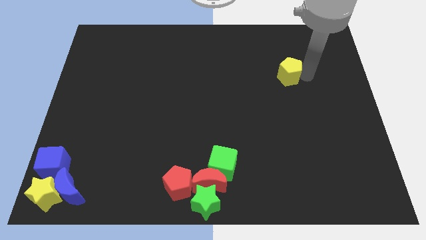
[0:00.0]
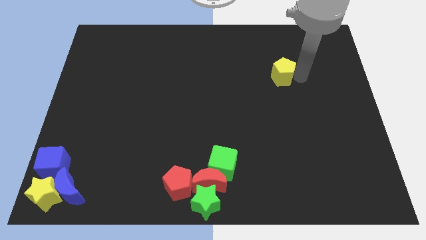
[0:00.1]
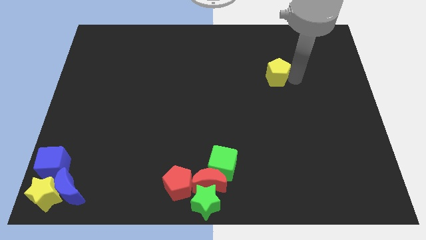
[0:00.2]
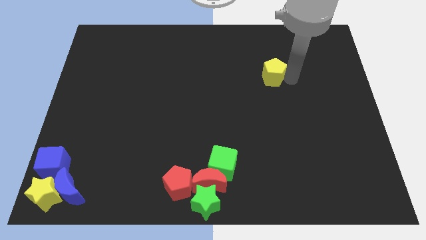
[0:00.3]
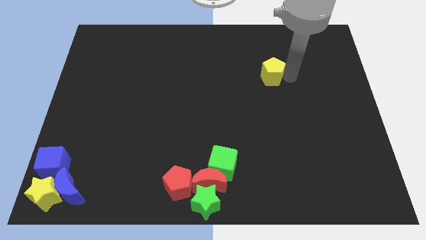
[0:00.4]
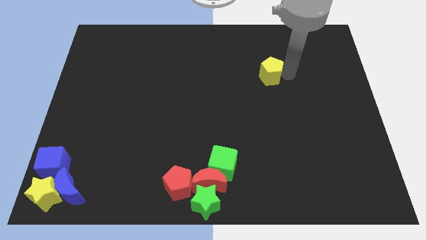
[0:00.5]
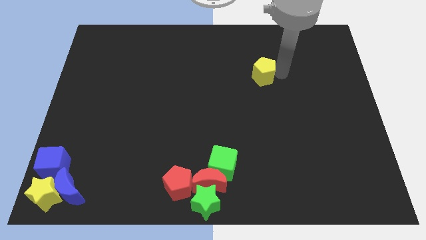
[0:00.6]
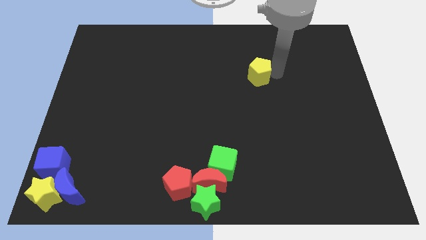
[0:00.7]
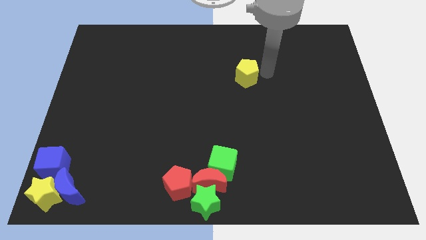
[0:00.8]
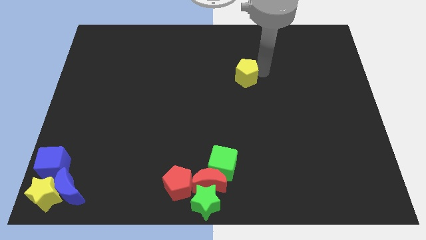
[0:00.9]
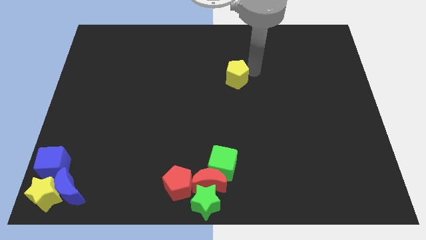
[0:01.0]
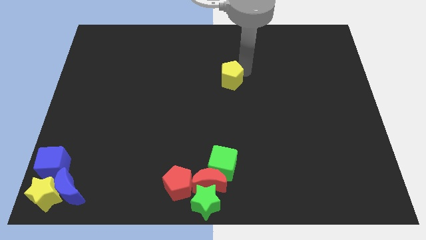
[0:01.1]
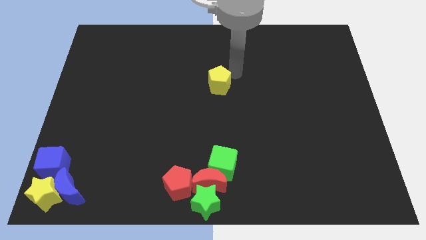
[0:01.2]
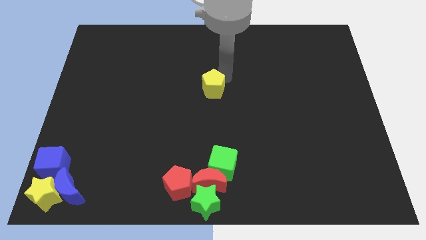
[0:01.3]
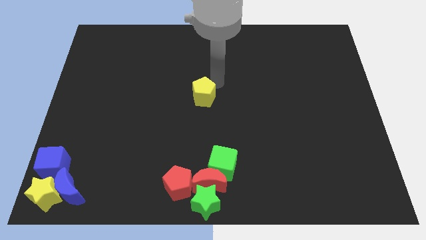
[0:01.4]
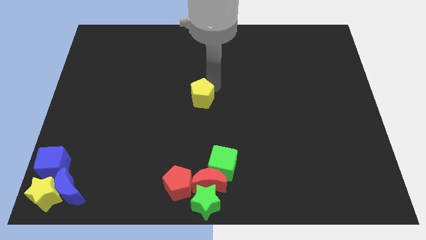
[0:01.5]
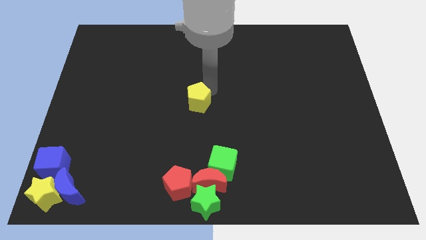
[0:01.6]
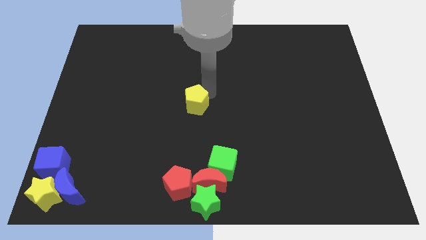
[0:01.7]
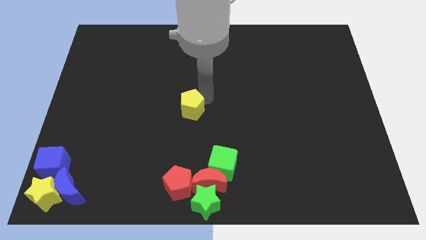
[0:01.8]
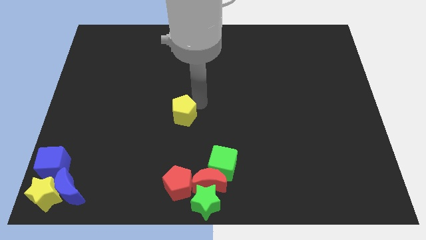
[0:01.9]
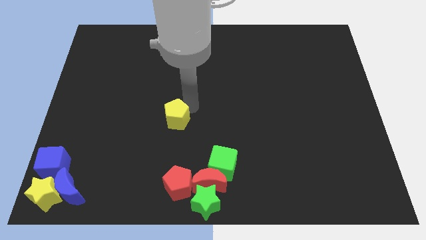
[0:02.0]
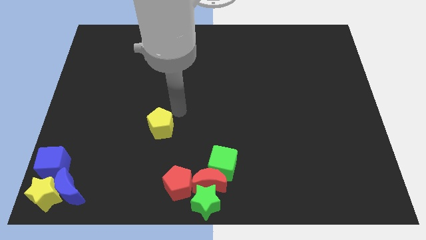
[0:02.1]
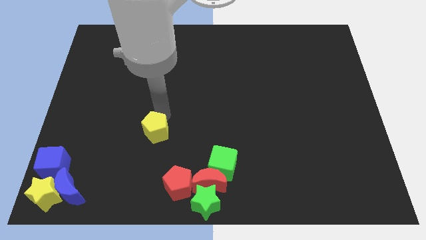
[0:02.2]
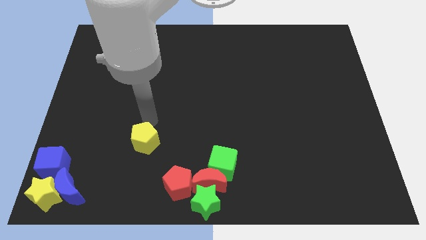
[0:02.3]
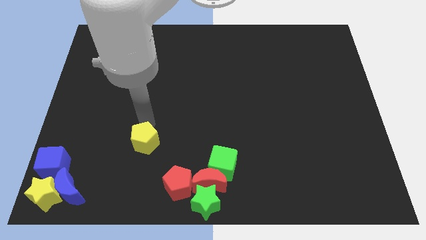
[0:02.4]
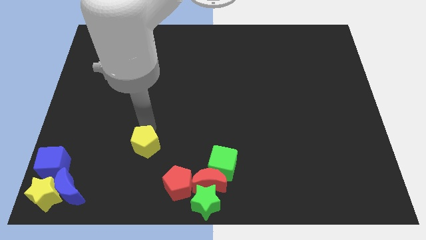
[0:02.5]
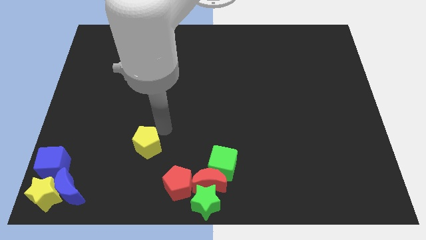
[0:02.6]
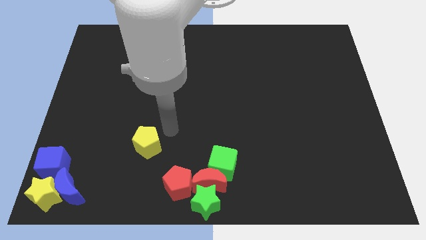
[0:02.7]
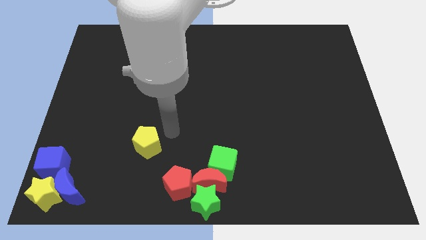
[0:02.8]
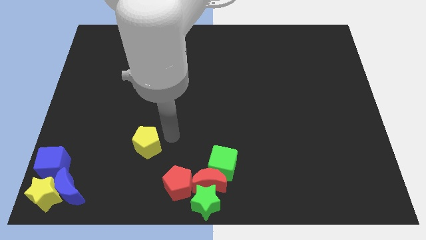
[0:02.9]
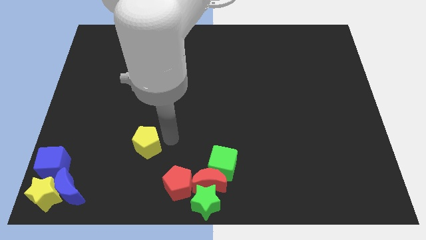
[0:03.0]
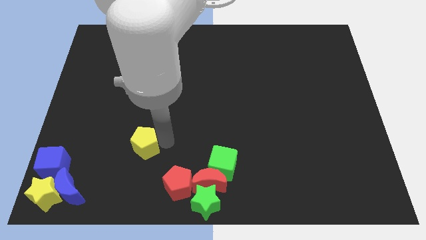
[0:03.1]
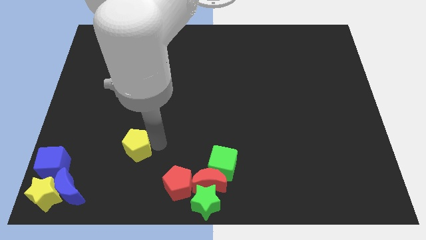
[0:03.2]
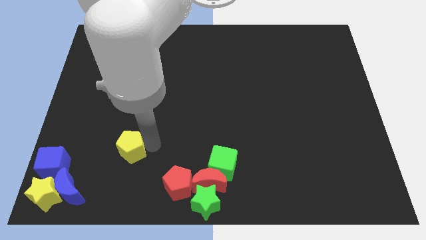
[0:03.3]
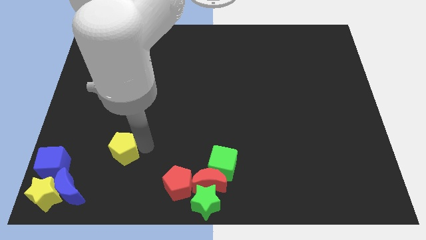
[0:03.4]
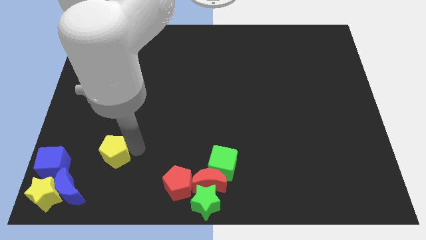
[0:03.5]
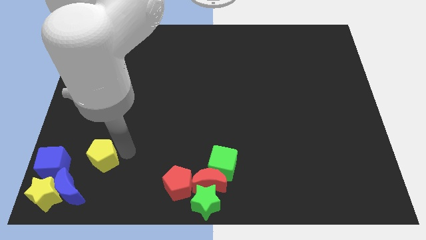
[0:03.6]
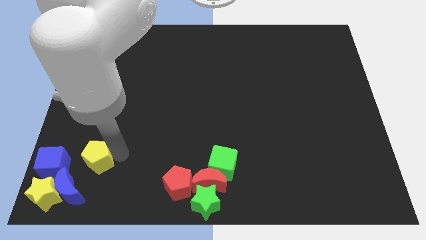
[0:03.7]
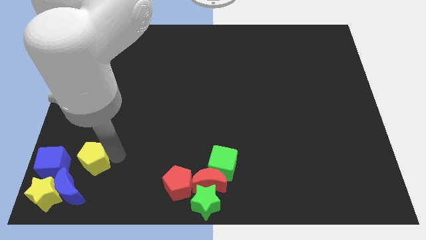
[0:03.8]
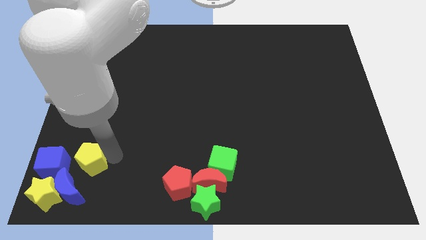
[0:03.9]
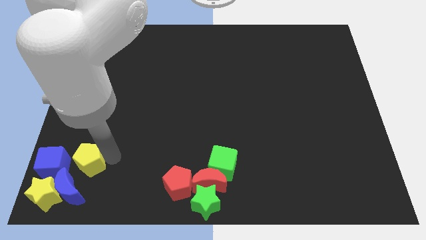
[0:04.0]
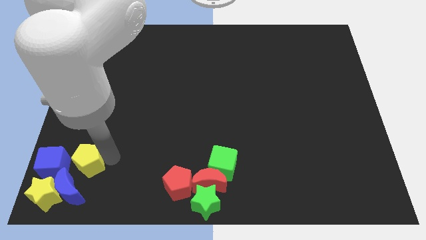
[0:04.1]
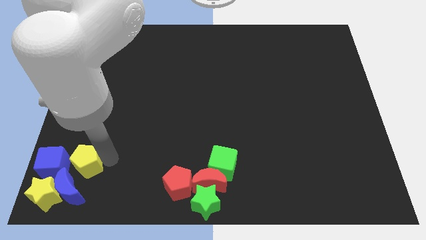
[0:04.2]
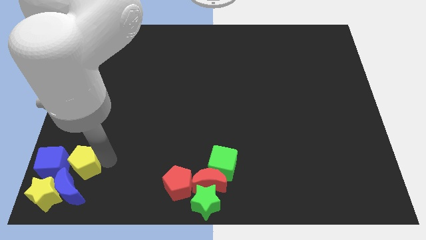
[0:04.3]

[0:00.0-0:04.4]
push the yellow pentagon right to the blue cube

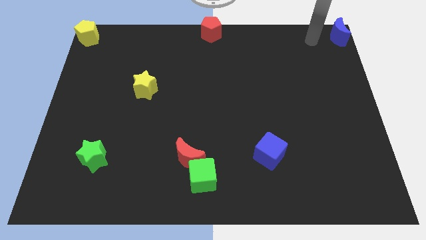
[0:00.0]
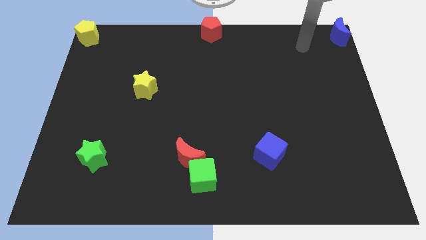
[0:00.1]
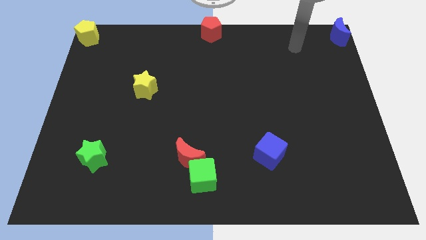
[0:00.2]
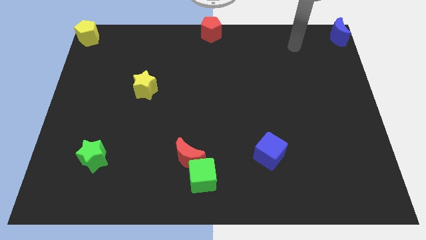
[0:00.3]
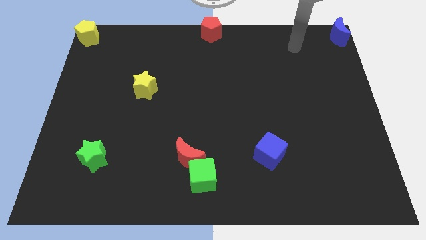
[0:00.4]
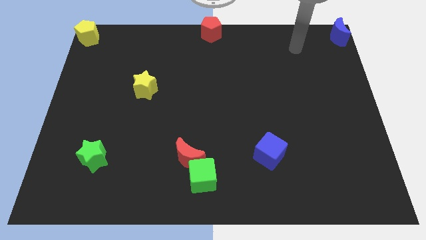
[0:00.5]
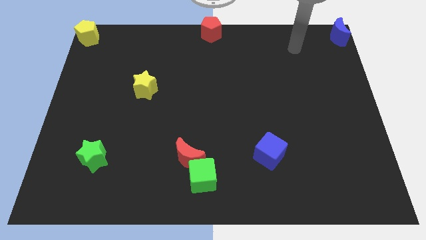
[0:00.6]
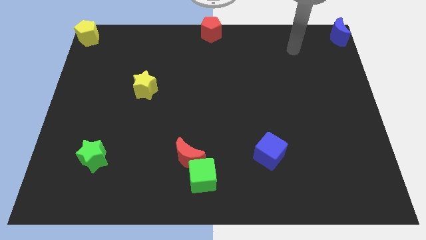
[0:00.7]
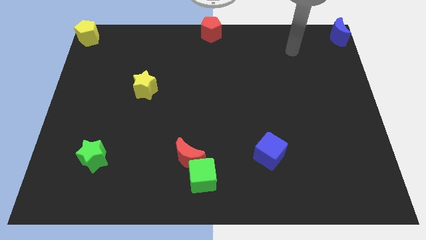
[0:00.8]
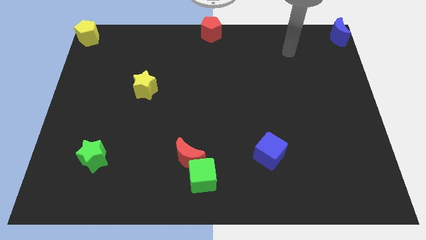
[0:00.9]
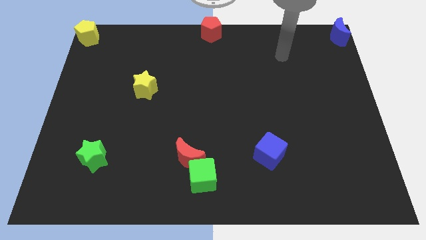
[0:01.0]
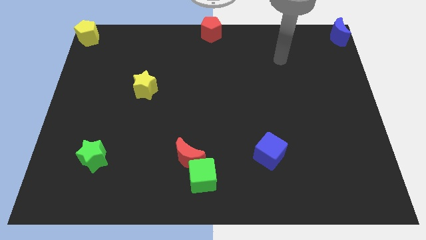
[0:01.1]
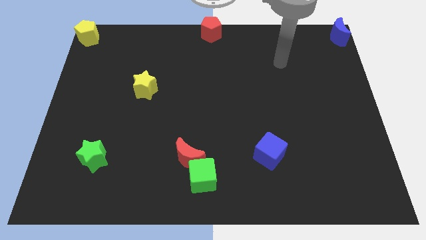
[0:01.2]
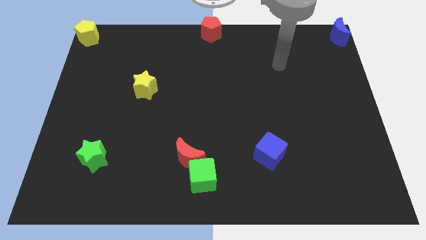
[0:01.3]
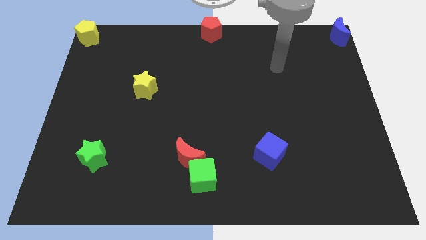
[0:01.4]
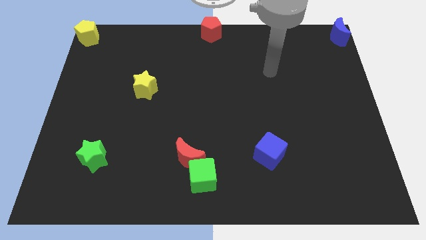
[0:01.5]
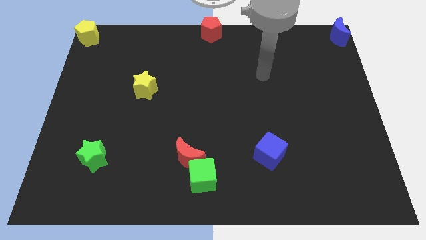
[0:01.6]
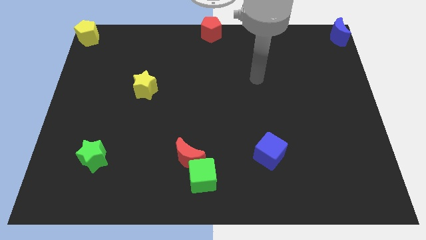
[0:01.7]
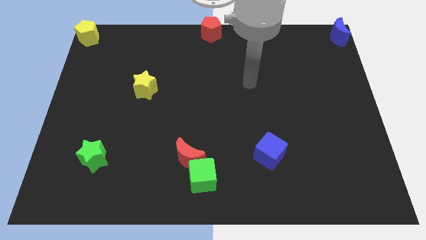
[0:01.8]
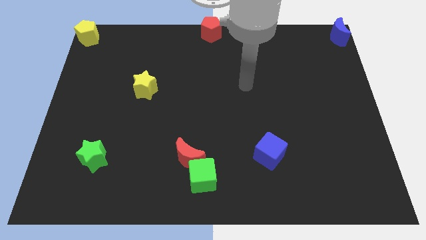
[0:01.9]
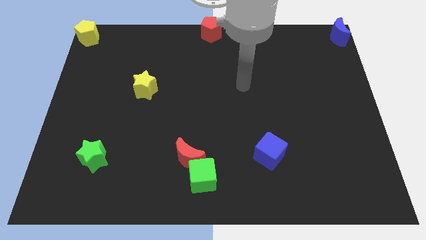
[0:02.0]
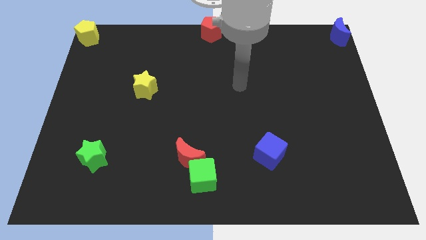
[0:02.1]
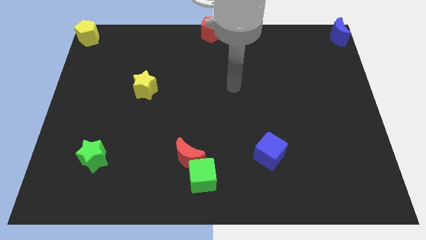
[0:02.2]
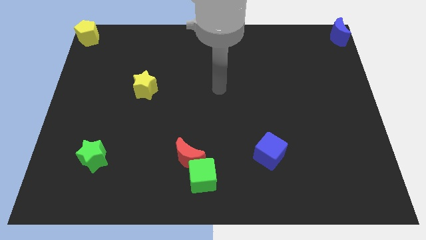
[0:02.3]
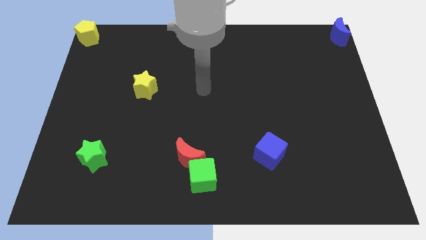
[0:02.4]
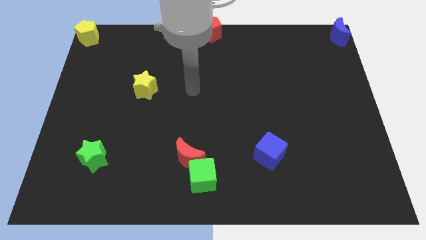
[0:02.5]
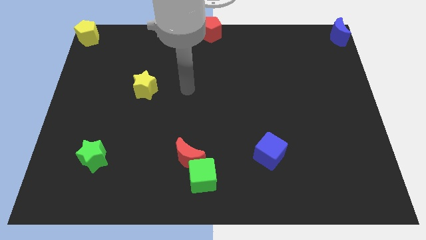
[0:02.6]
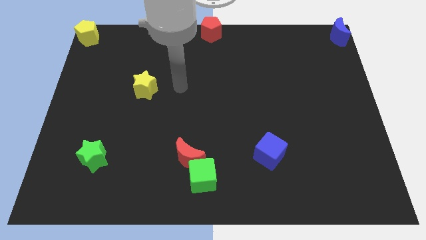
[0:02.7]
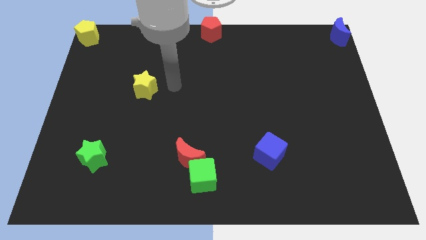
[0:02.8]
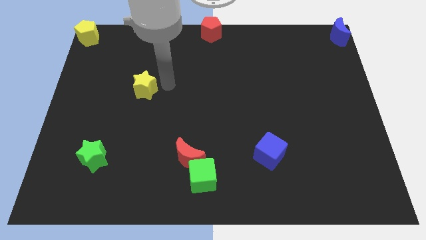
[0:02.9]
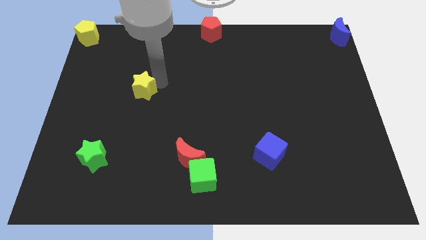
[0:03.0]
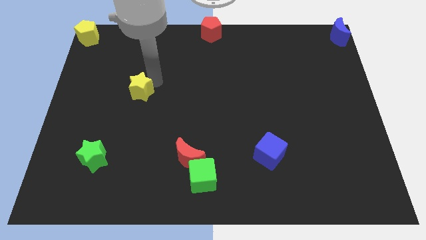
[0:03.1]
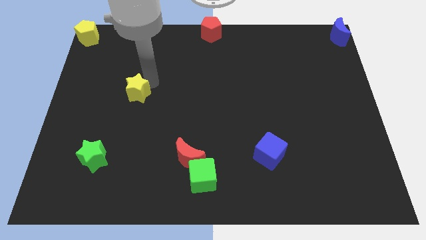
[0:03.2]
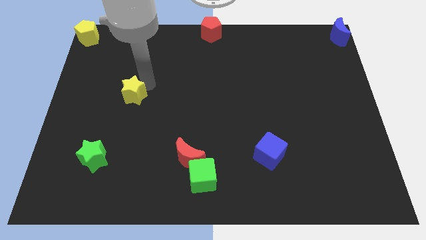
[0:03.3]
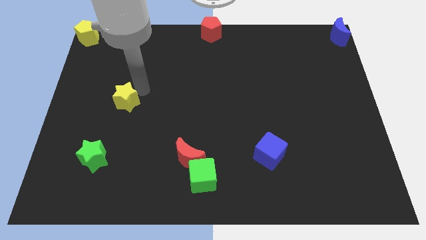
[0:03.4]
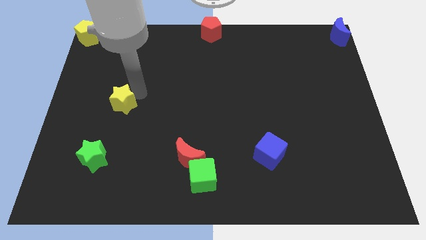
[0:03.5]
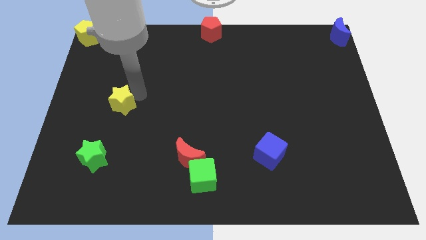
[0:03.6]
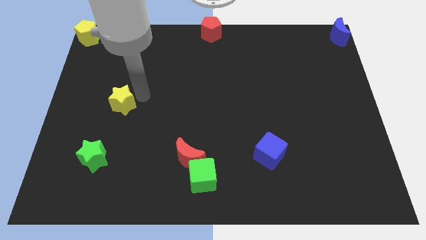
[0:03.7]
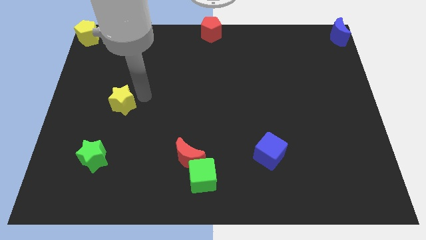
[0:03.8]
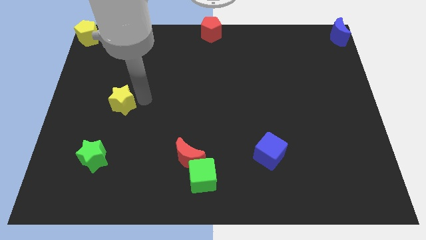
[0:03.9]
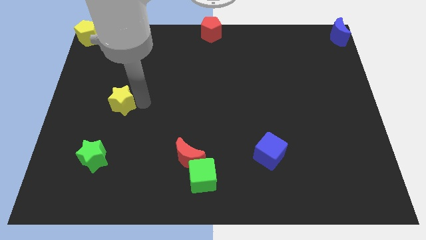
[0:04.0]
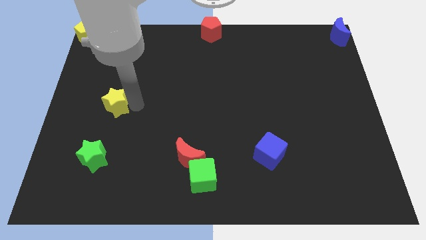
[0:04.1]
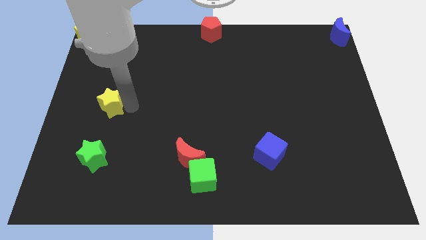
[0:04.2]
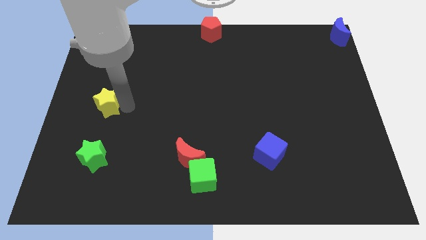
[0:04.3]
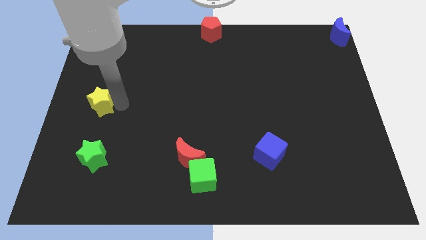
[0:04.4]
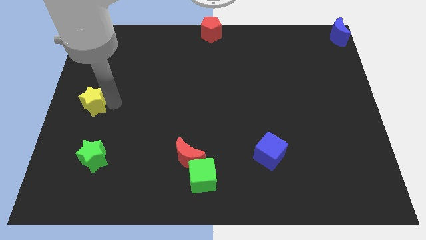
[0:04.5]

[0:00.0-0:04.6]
slide the yellow star vertically above the green star
